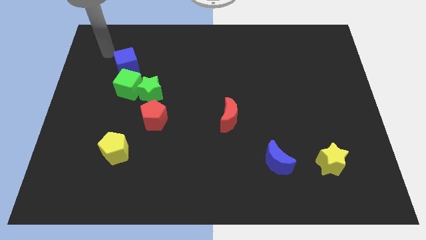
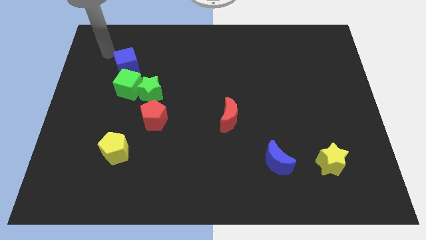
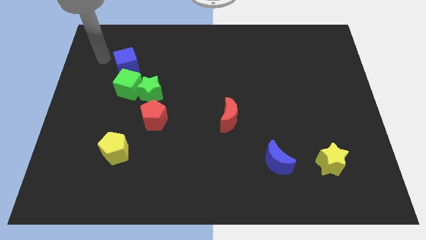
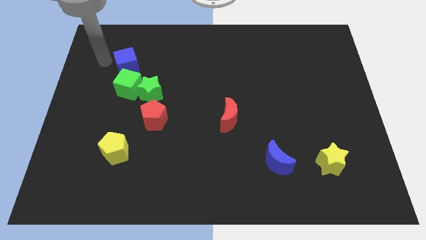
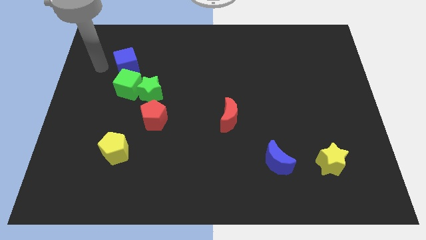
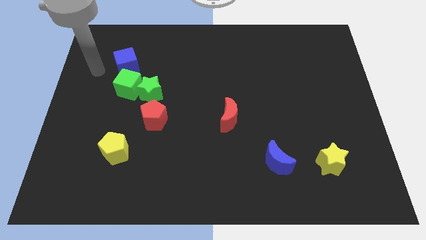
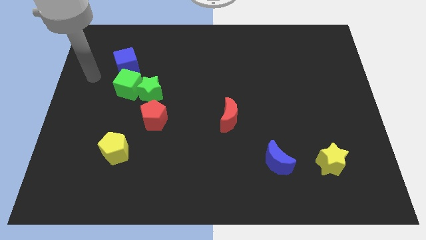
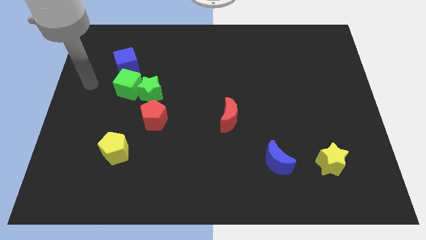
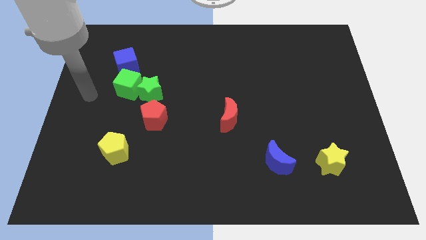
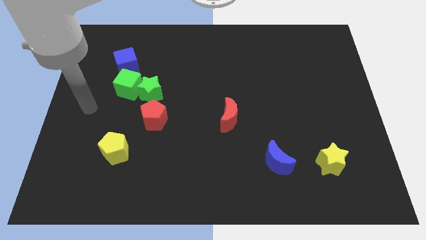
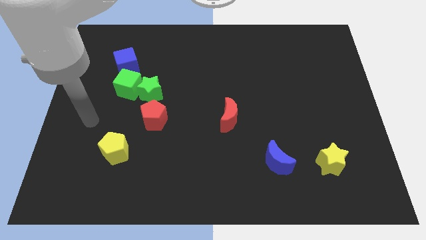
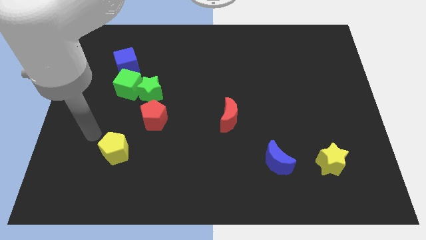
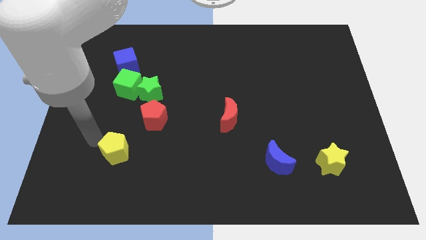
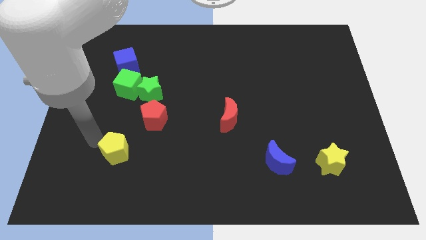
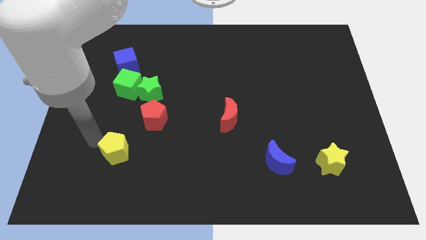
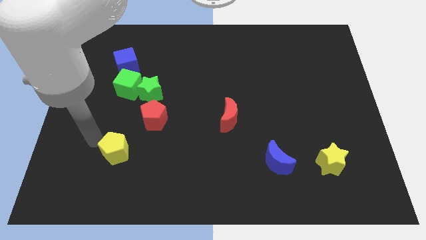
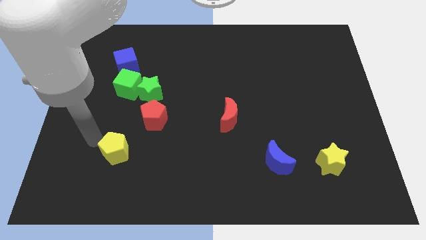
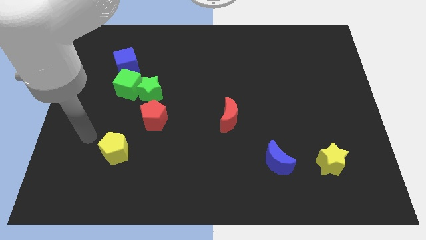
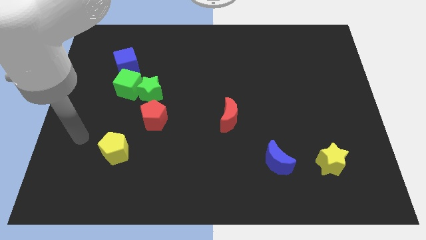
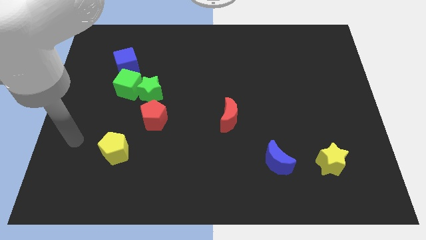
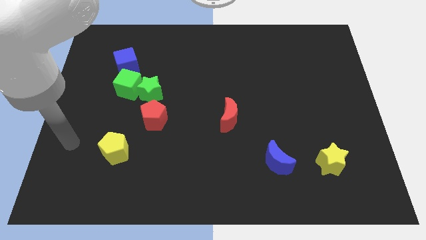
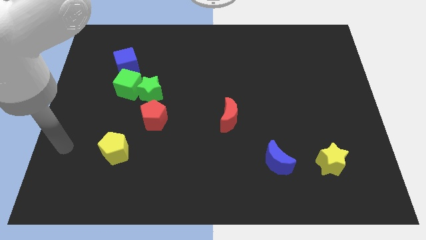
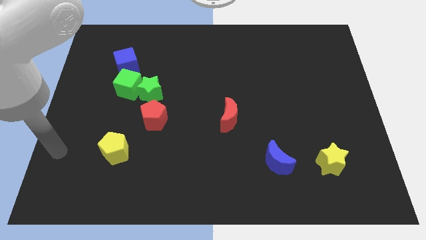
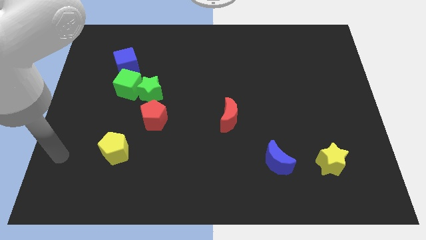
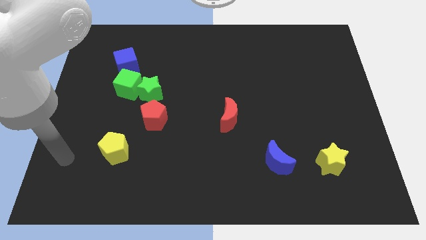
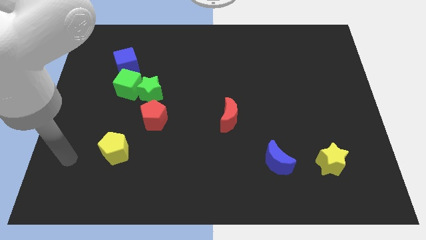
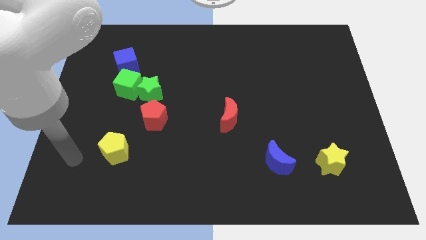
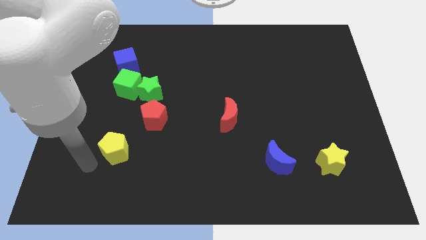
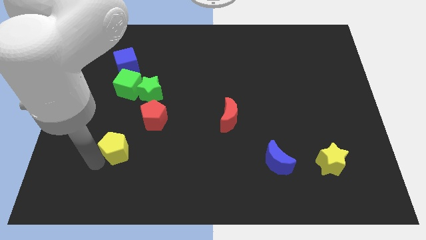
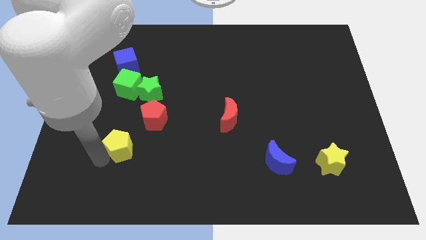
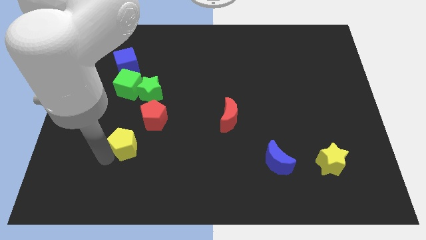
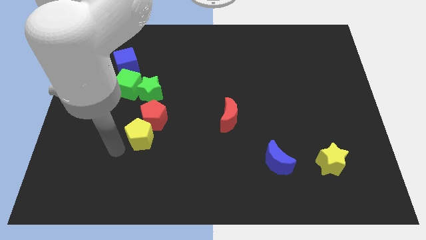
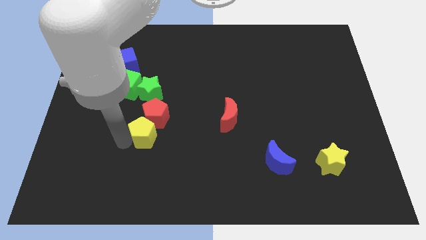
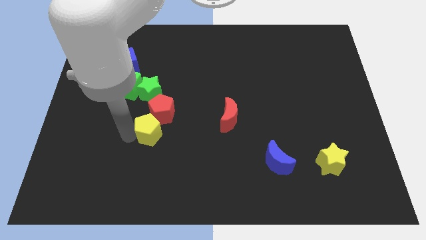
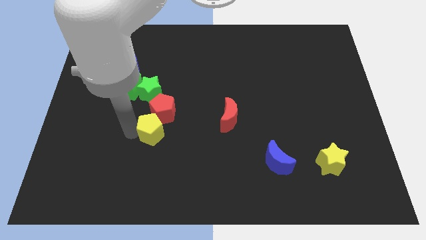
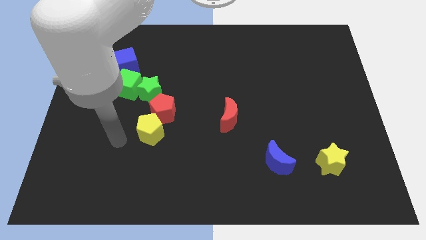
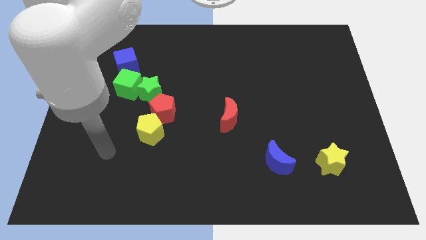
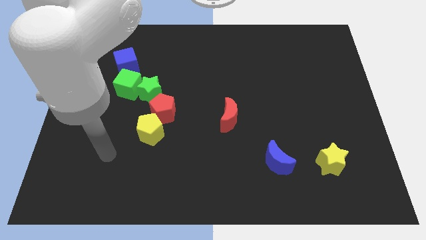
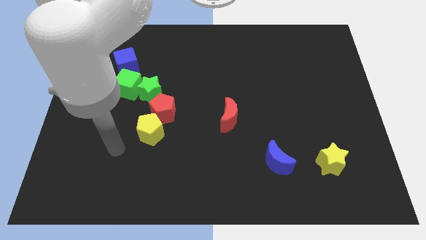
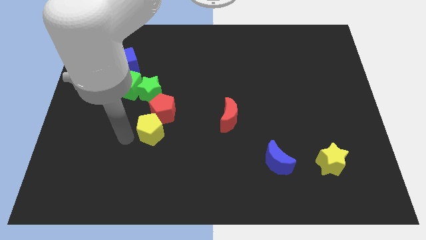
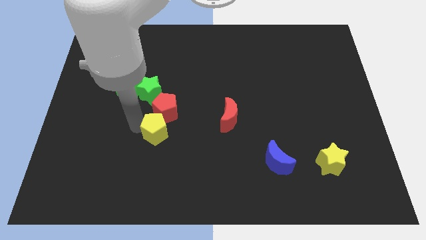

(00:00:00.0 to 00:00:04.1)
push the yellow pentagon in red pentagon

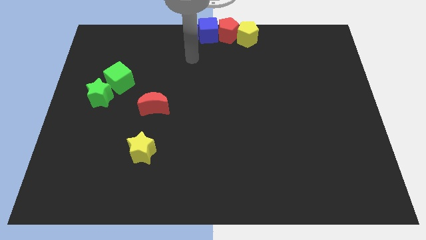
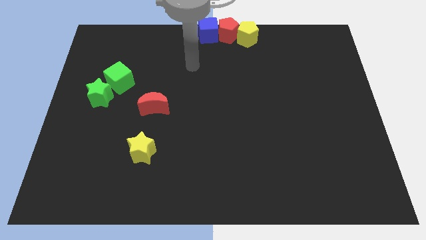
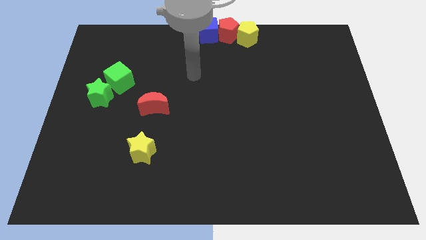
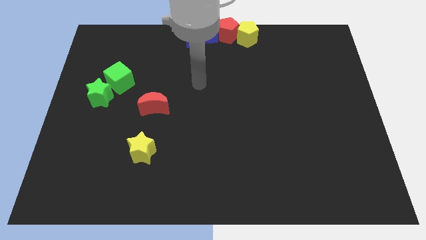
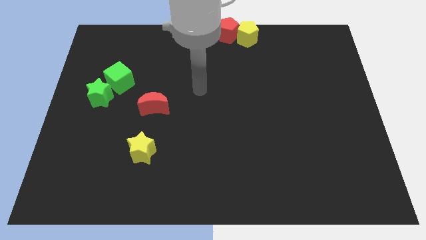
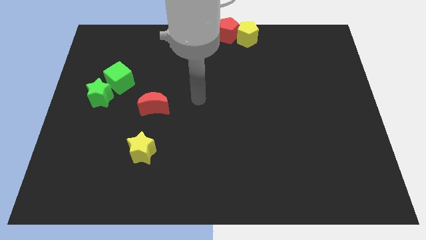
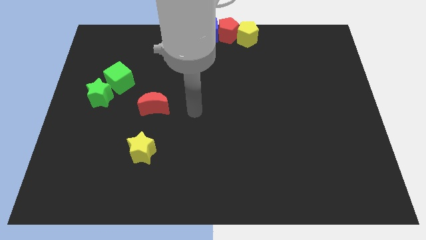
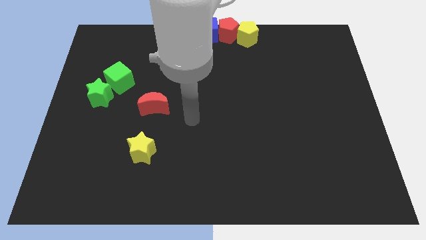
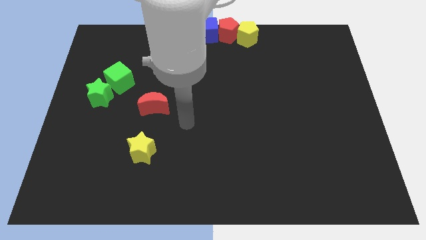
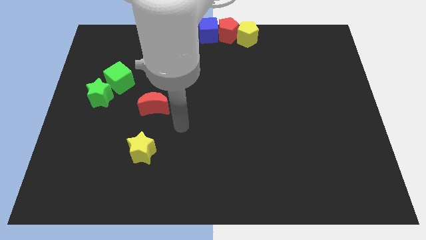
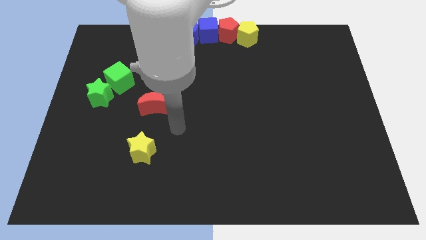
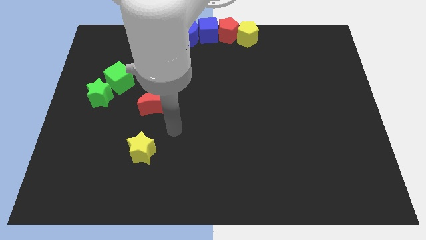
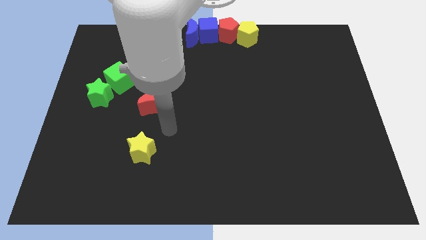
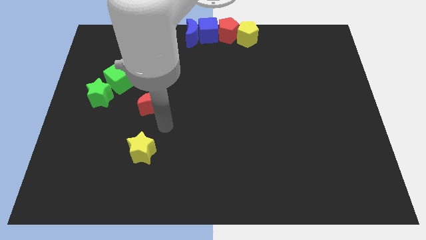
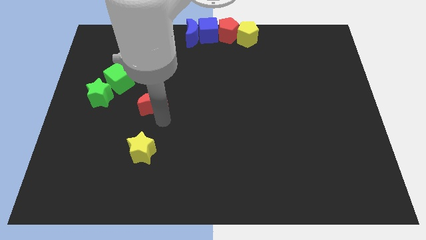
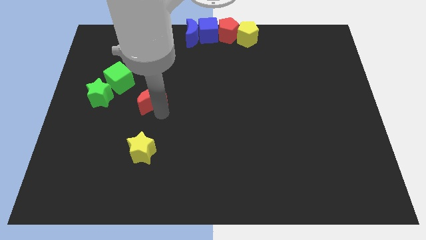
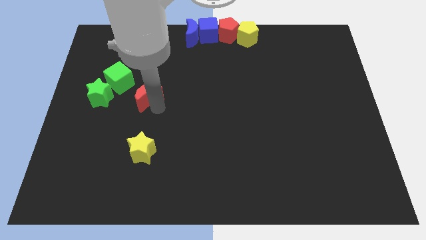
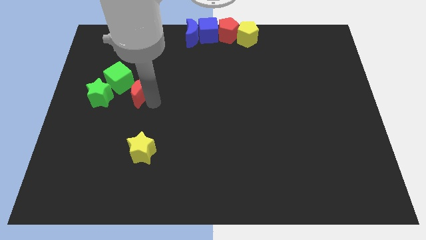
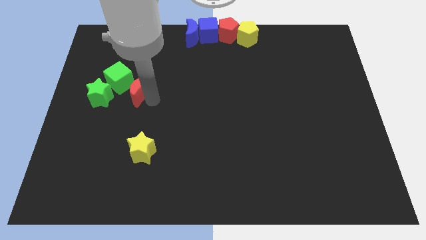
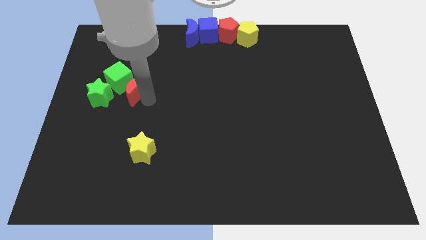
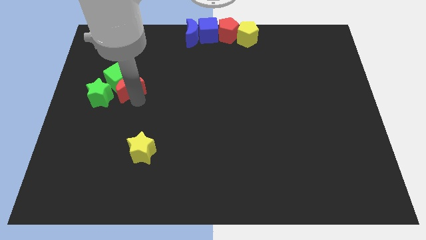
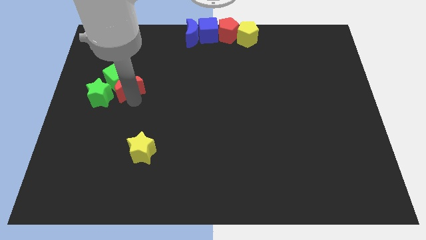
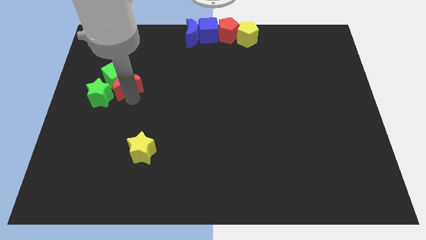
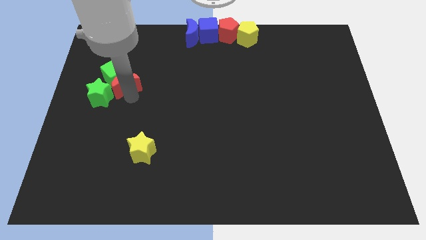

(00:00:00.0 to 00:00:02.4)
push the red moon into green cube diagonally

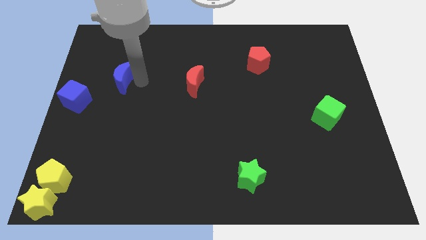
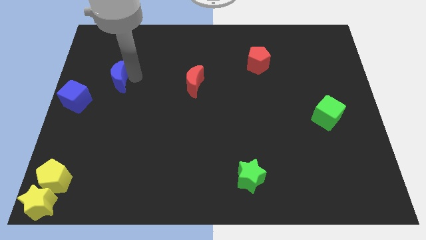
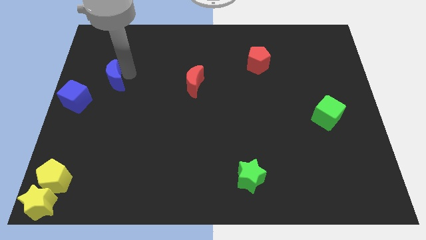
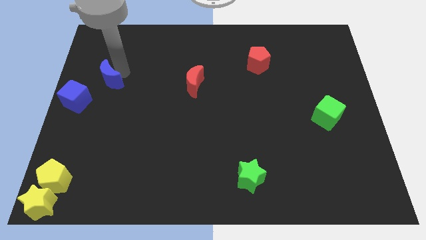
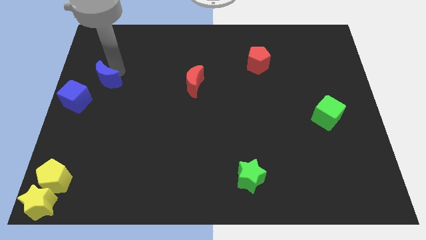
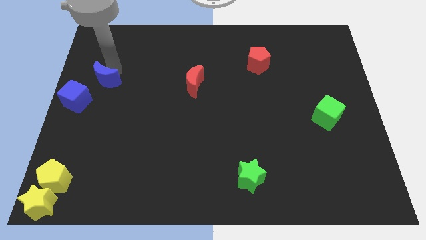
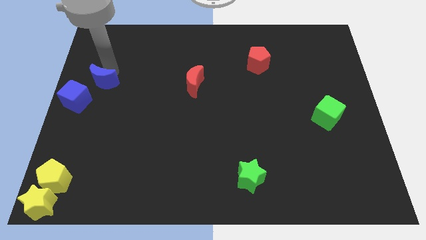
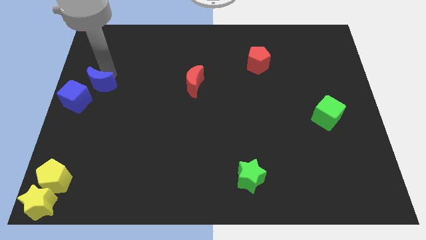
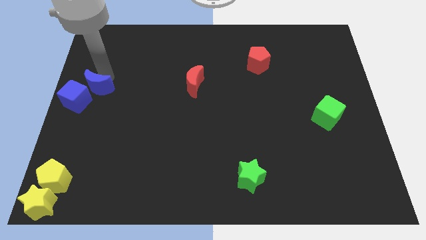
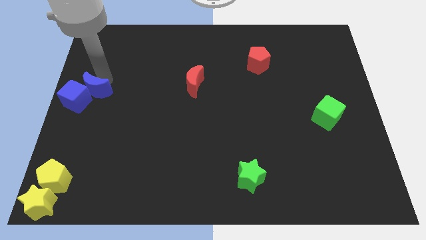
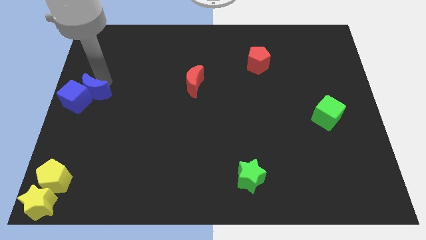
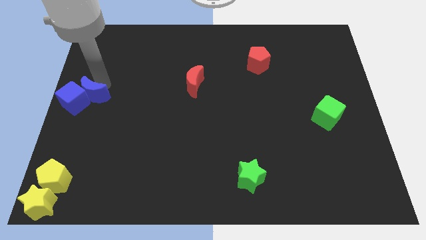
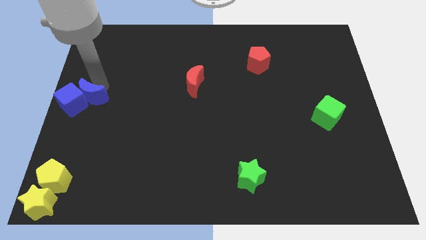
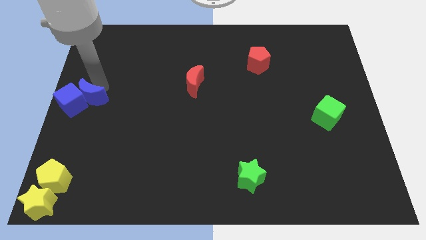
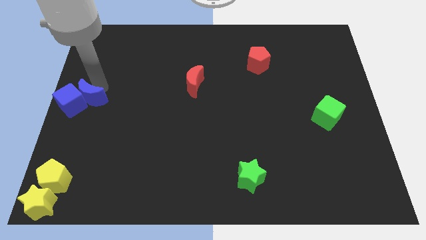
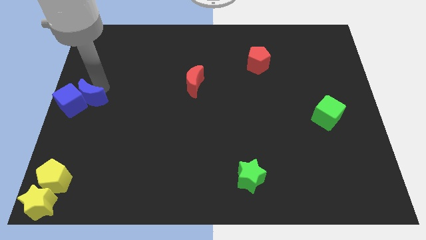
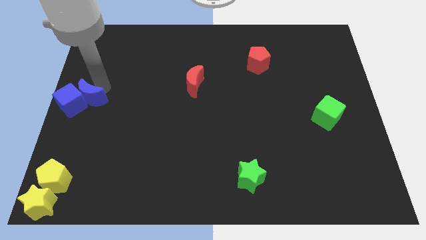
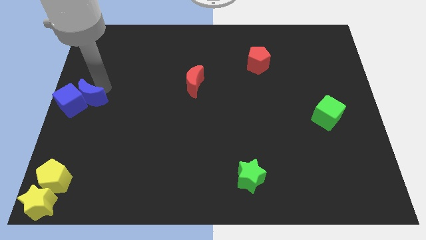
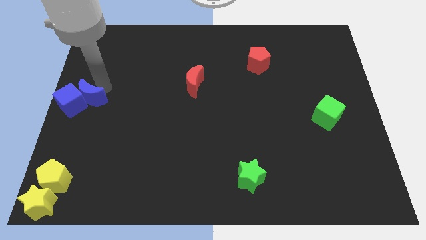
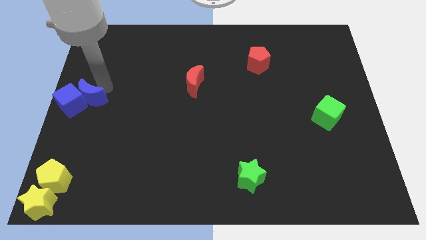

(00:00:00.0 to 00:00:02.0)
push the blue crescent into the blue cube

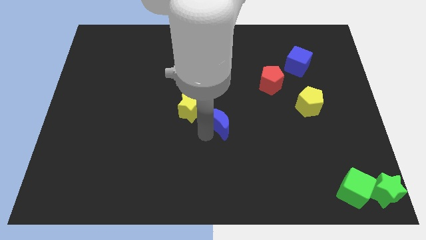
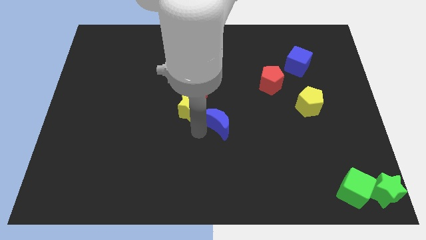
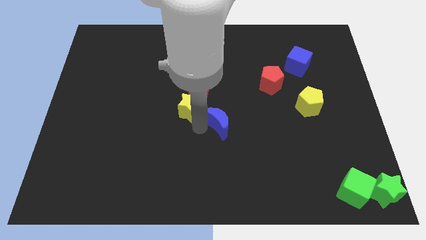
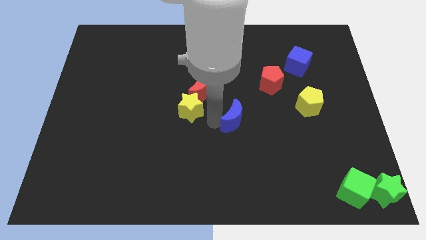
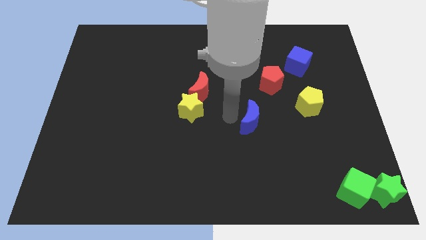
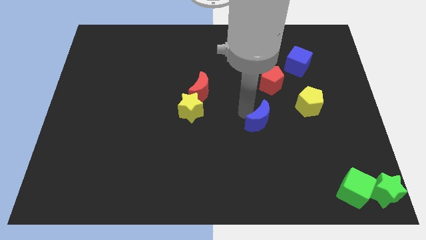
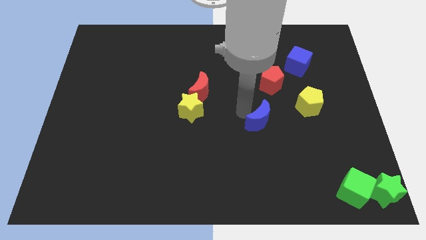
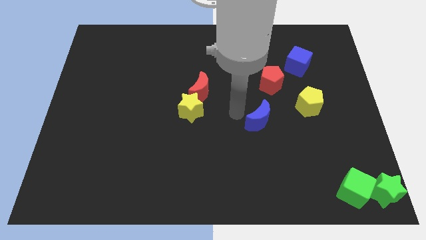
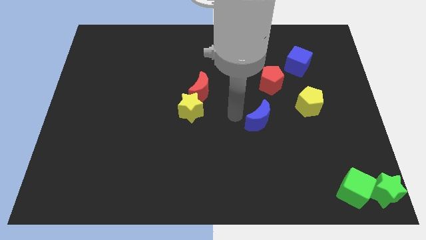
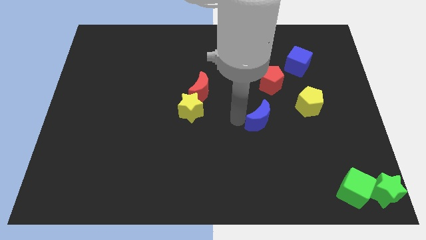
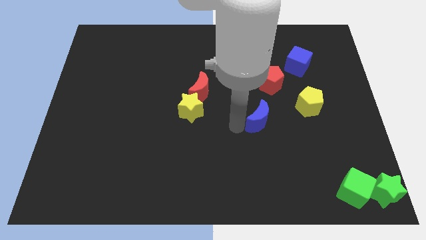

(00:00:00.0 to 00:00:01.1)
push the blue moon parallel to the left of the yellow pentagon
